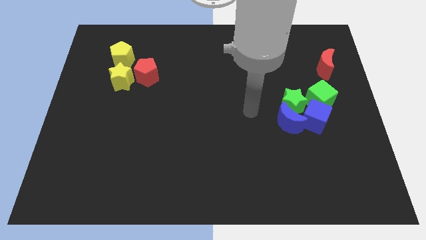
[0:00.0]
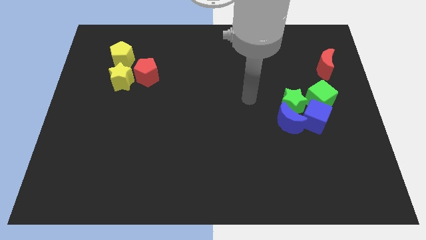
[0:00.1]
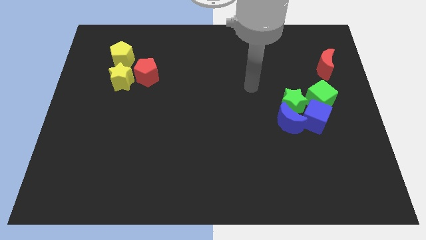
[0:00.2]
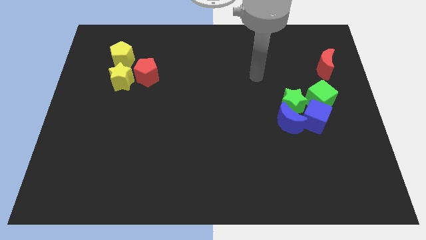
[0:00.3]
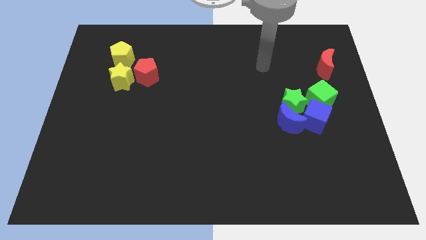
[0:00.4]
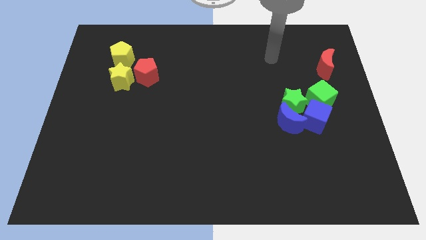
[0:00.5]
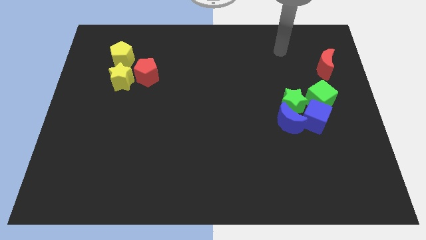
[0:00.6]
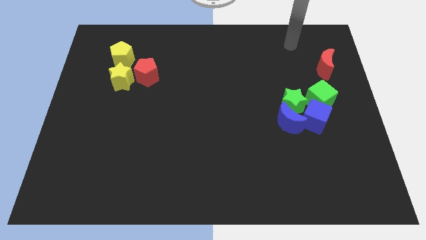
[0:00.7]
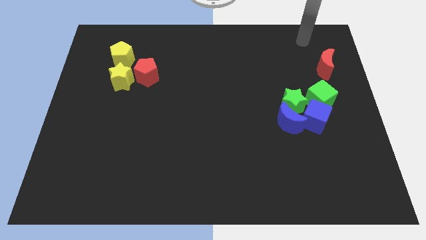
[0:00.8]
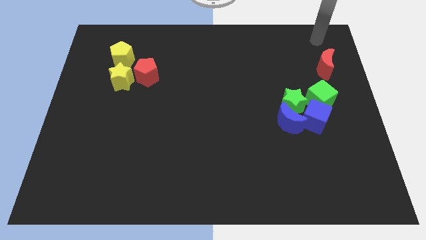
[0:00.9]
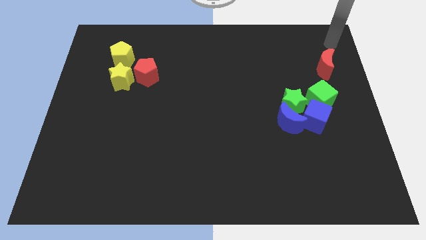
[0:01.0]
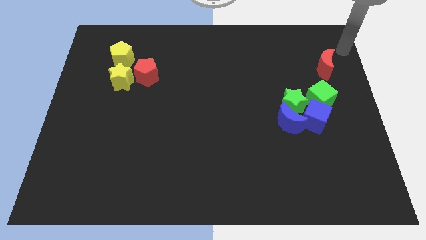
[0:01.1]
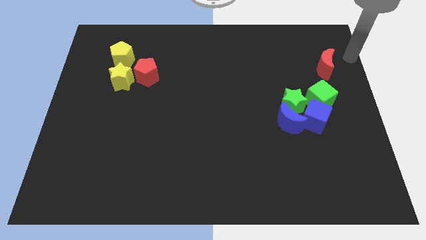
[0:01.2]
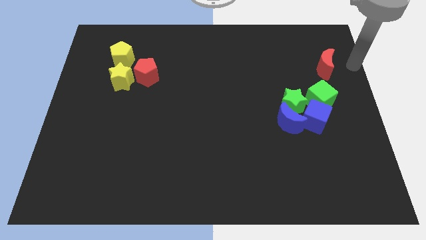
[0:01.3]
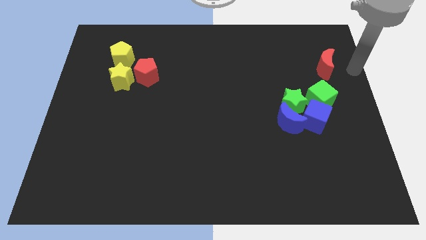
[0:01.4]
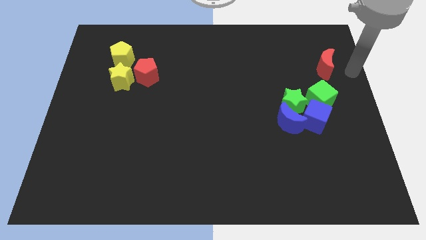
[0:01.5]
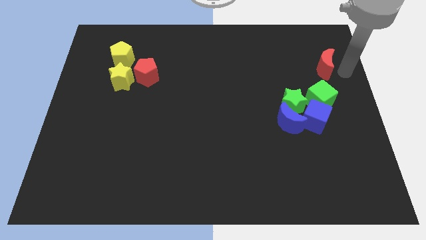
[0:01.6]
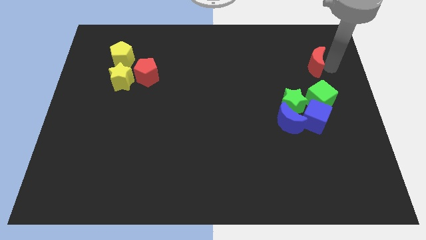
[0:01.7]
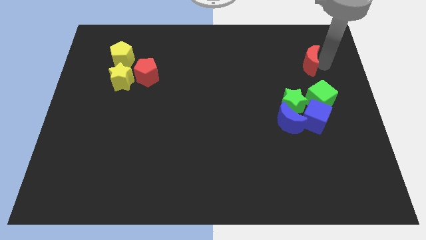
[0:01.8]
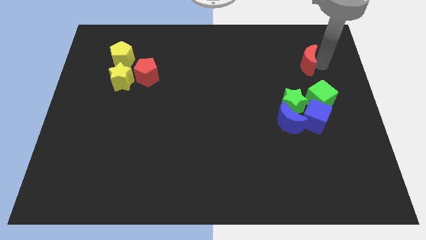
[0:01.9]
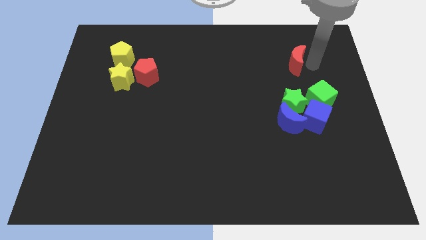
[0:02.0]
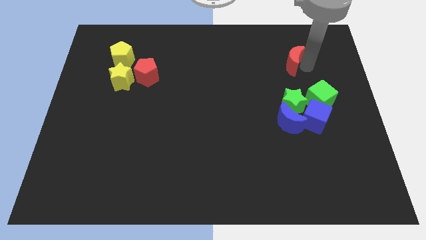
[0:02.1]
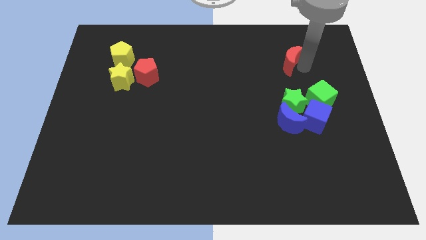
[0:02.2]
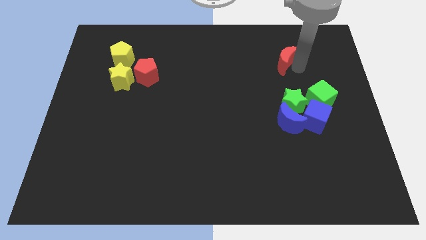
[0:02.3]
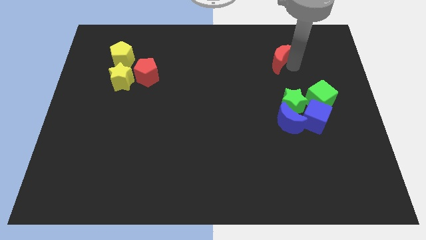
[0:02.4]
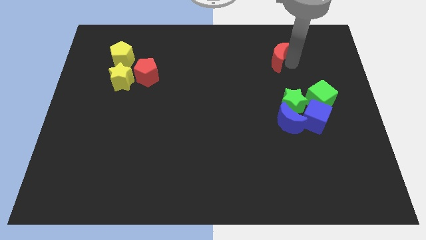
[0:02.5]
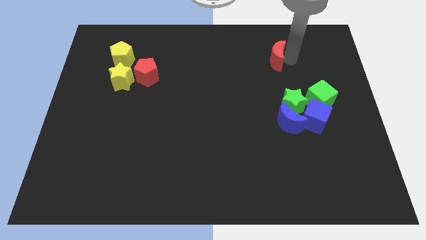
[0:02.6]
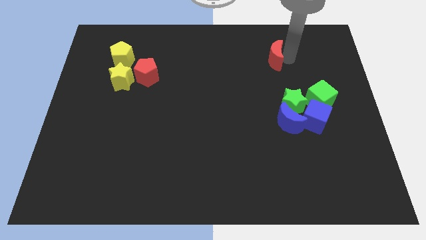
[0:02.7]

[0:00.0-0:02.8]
move the red moon diagonally towards the top left of the green star

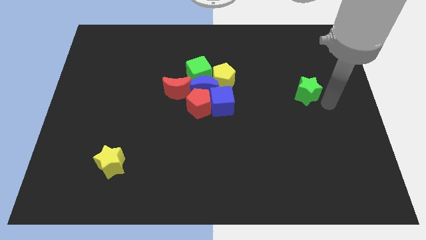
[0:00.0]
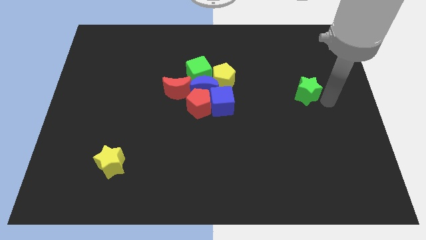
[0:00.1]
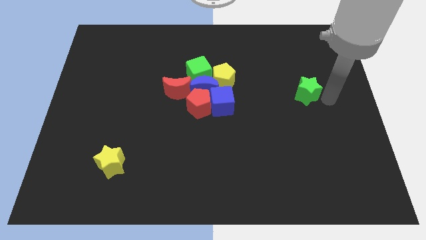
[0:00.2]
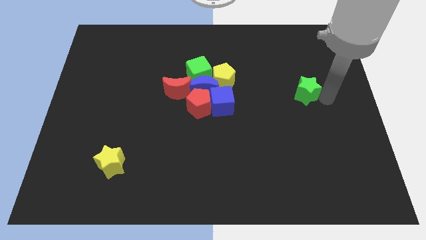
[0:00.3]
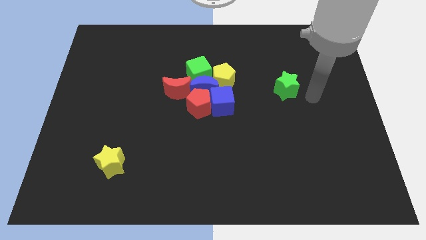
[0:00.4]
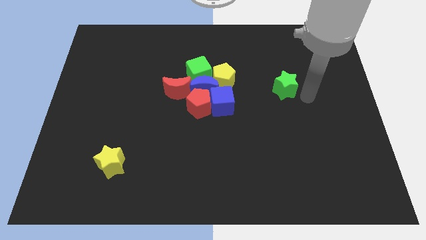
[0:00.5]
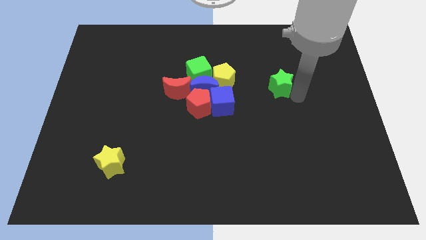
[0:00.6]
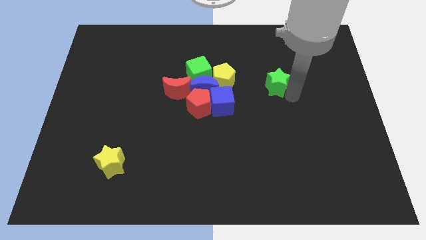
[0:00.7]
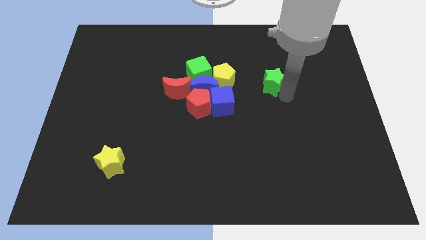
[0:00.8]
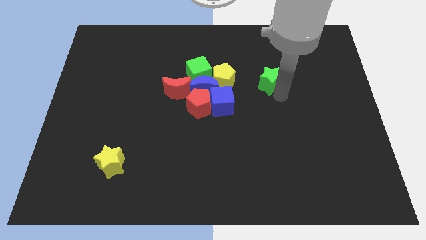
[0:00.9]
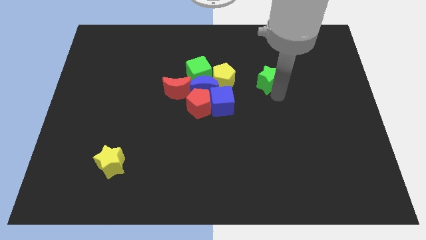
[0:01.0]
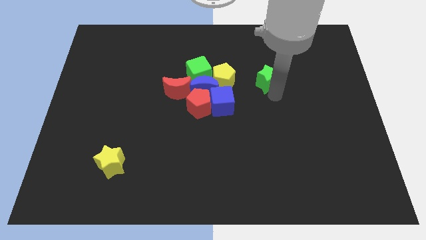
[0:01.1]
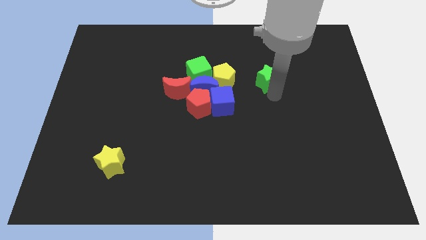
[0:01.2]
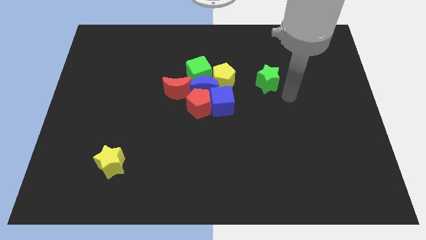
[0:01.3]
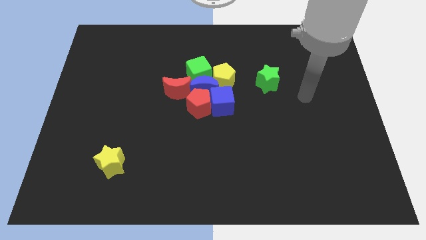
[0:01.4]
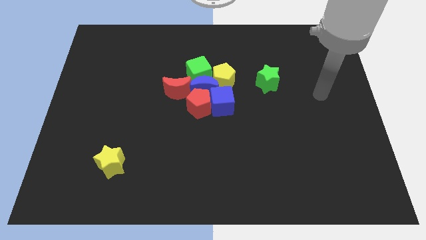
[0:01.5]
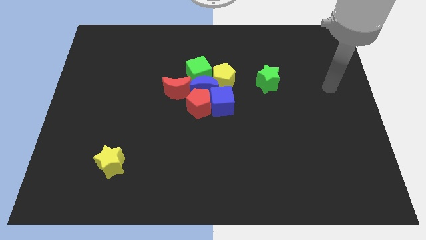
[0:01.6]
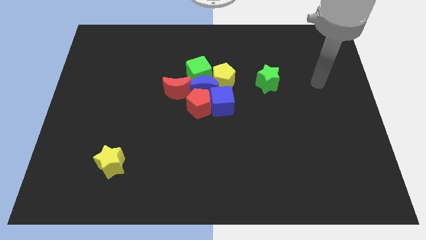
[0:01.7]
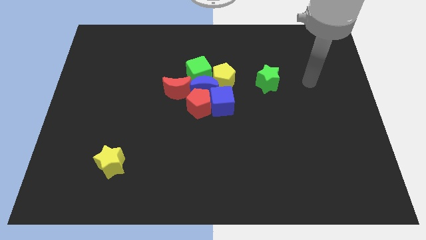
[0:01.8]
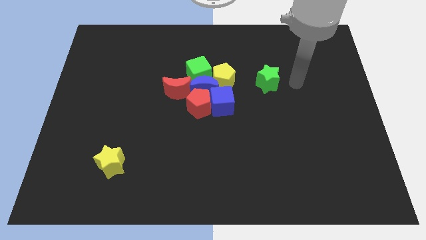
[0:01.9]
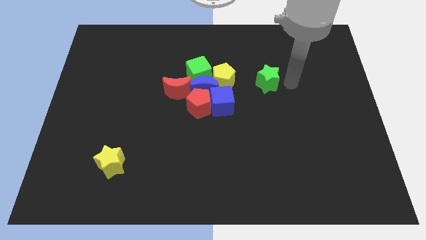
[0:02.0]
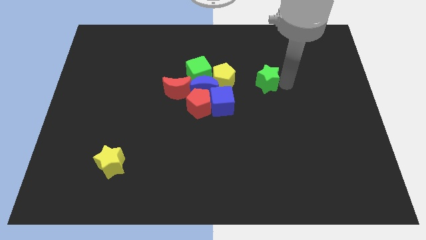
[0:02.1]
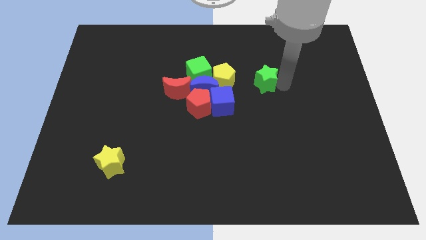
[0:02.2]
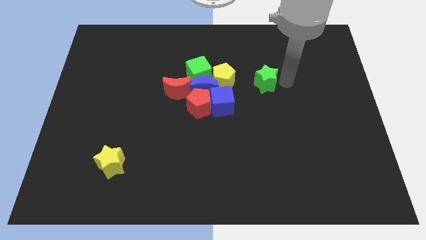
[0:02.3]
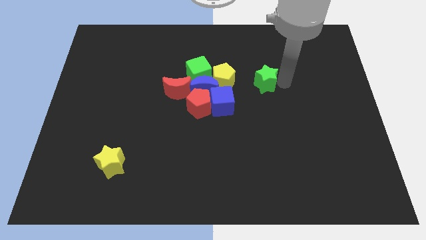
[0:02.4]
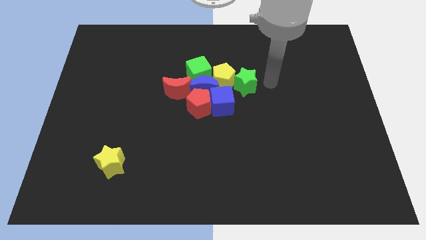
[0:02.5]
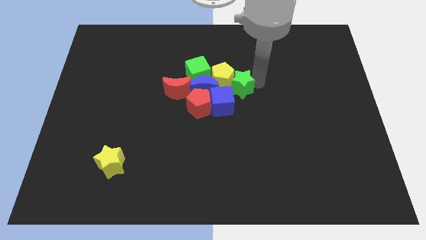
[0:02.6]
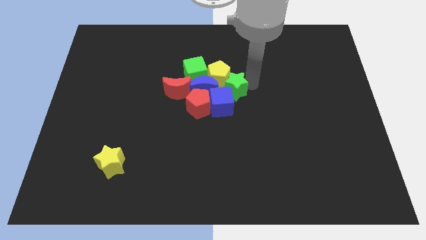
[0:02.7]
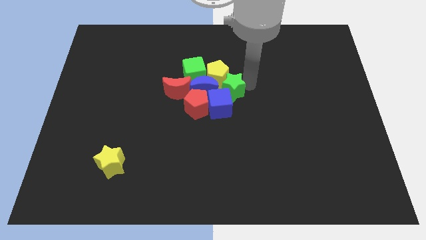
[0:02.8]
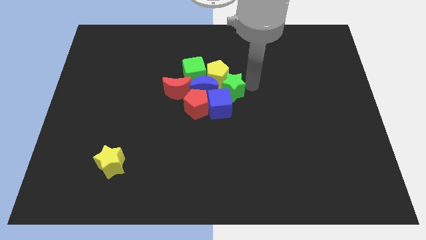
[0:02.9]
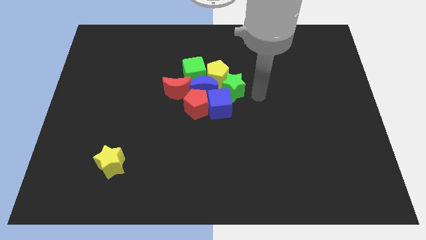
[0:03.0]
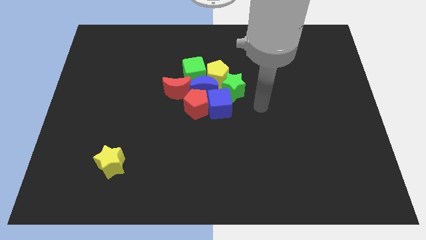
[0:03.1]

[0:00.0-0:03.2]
push the green star towards the other blocks which are at the center of the board

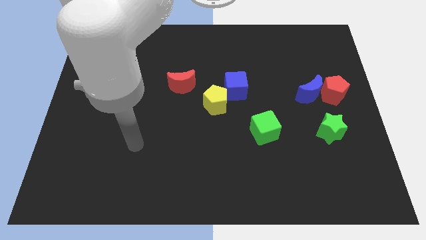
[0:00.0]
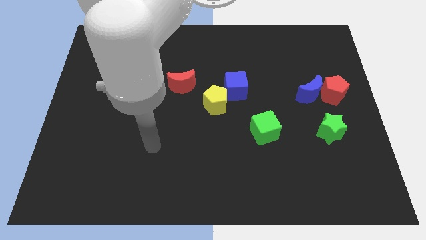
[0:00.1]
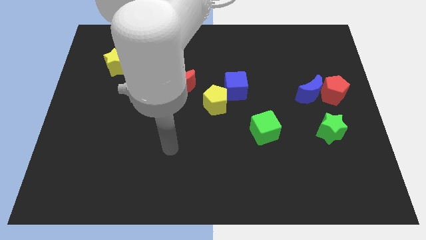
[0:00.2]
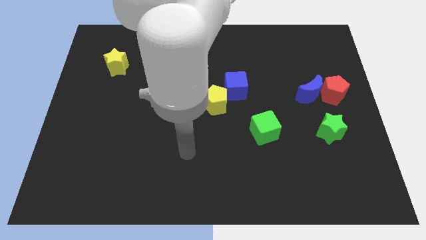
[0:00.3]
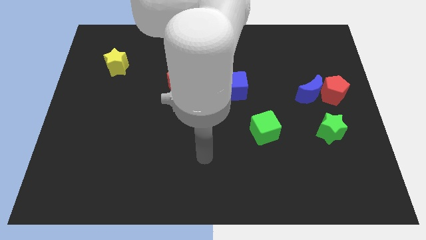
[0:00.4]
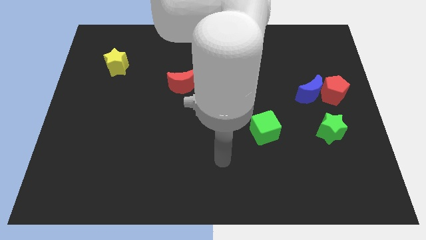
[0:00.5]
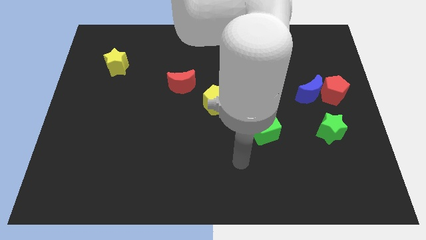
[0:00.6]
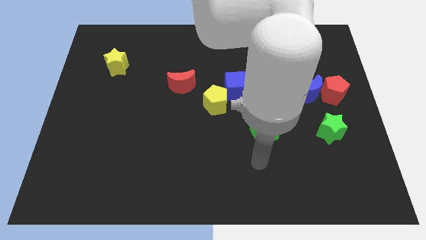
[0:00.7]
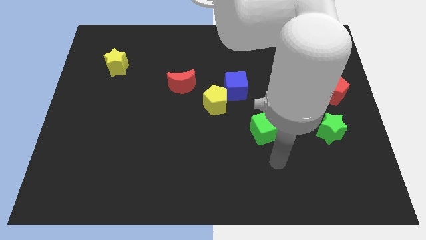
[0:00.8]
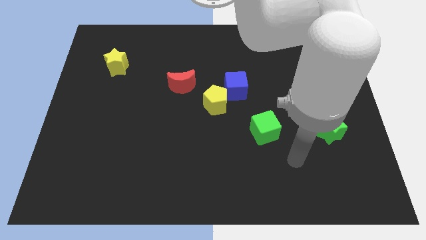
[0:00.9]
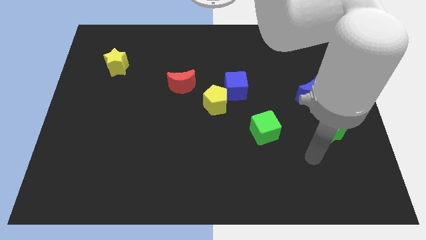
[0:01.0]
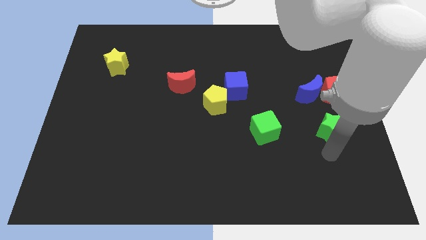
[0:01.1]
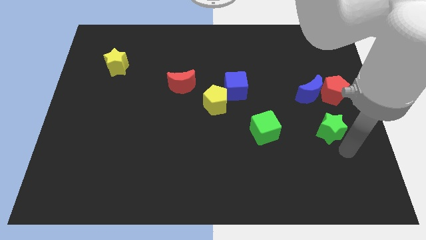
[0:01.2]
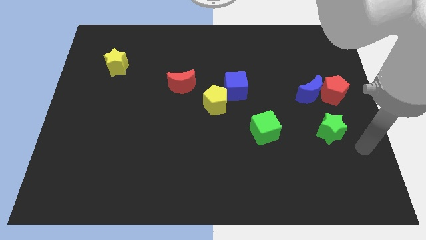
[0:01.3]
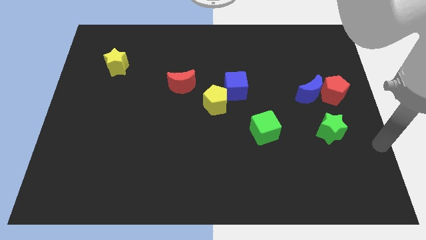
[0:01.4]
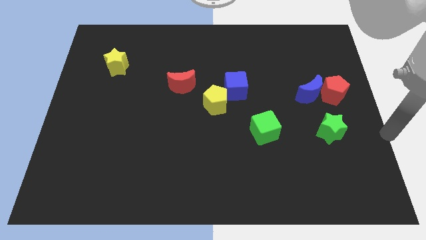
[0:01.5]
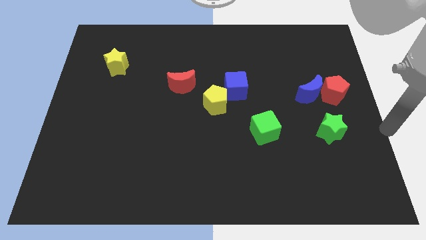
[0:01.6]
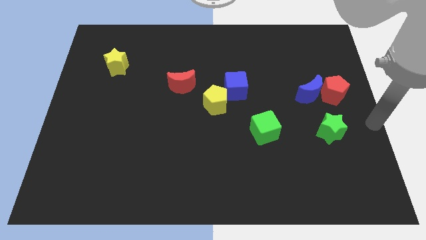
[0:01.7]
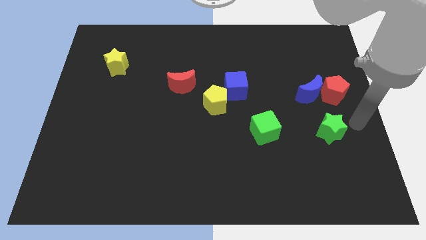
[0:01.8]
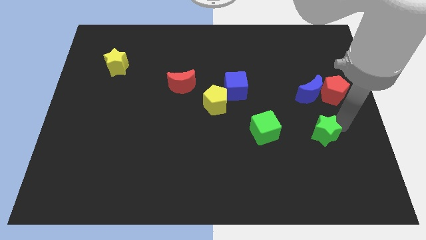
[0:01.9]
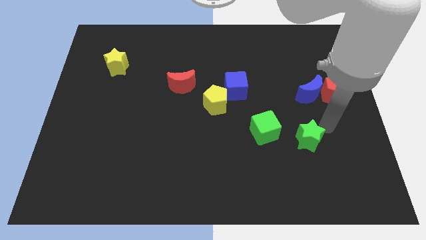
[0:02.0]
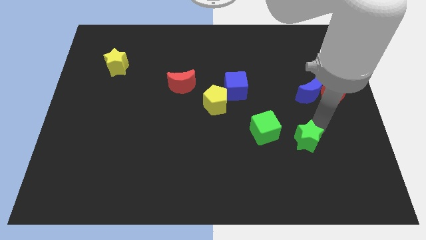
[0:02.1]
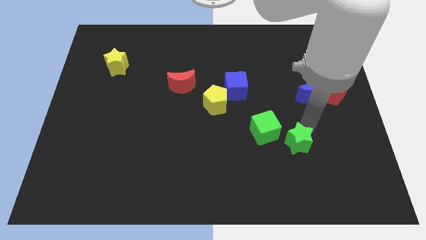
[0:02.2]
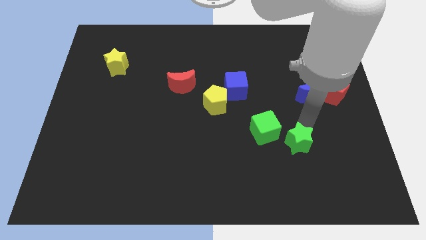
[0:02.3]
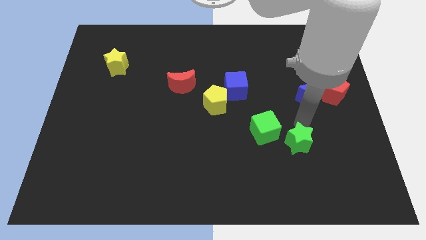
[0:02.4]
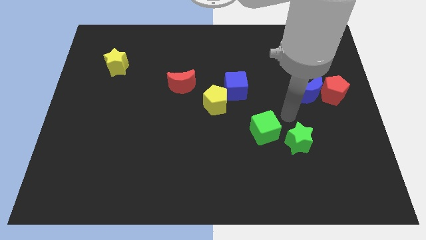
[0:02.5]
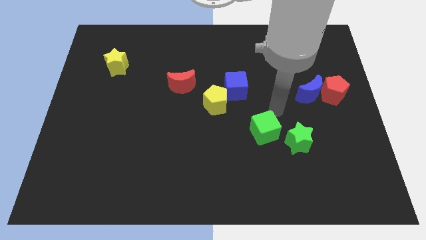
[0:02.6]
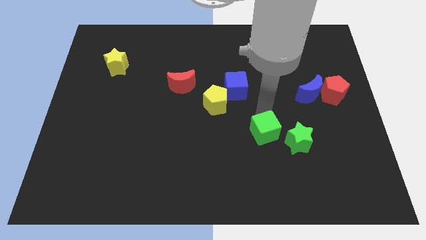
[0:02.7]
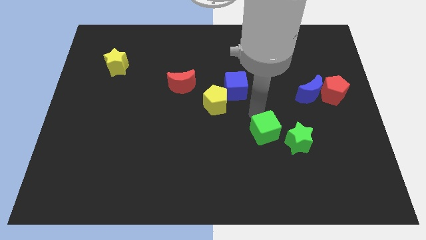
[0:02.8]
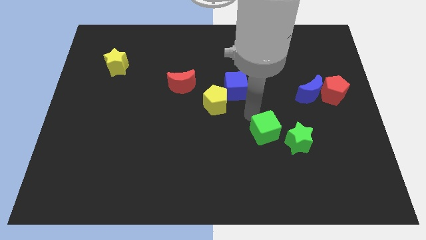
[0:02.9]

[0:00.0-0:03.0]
move the green star towards the green cube
